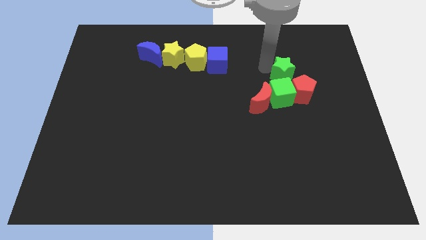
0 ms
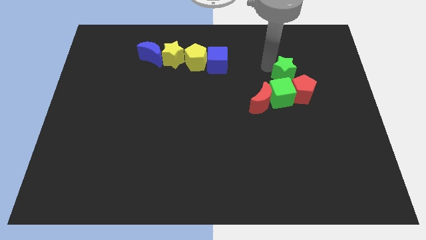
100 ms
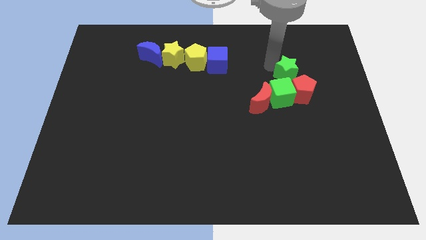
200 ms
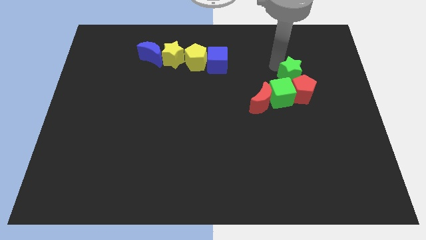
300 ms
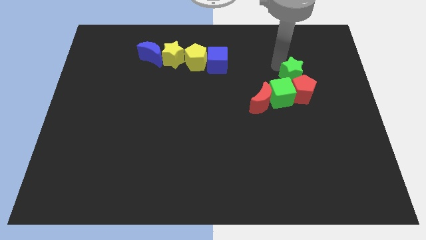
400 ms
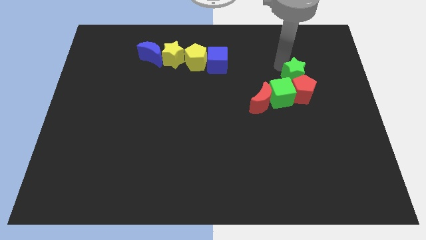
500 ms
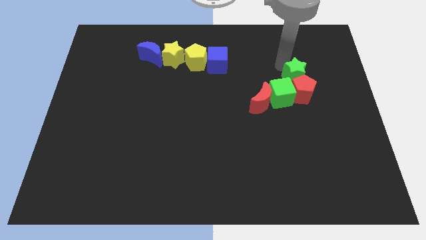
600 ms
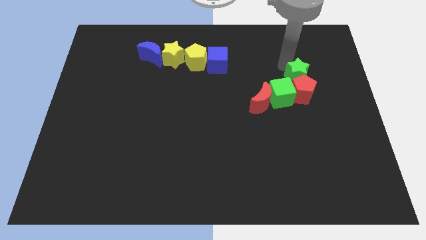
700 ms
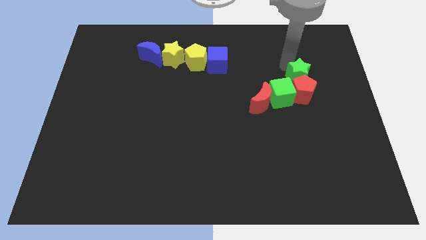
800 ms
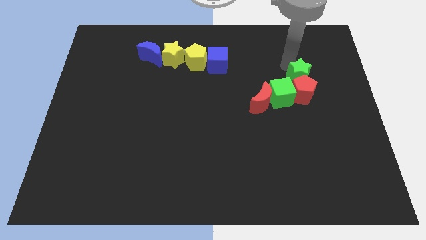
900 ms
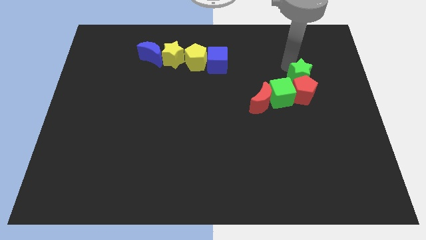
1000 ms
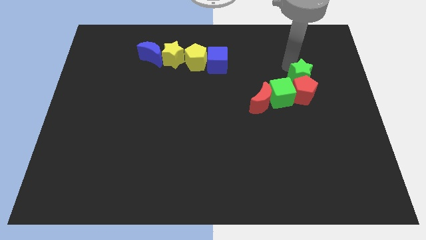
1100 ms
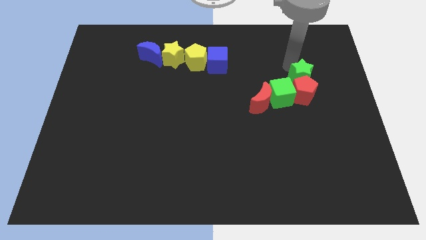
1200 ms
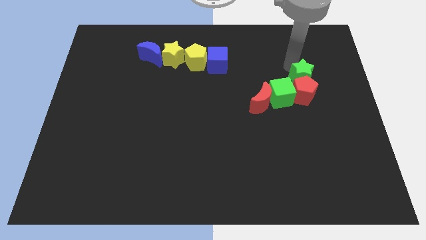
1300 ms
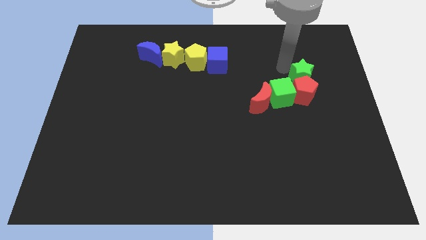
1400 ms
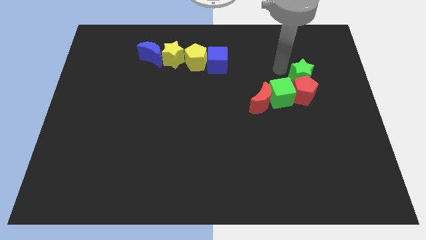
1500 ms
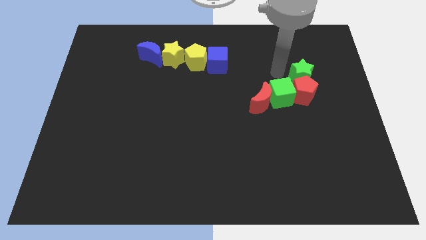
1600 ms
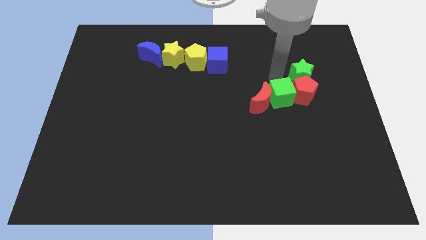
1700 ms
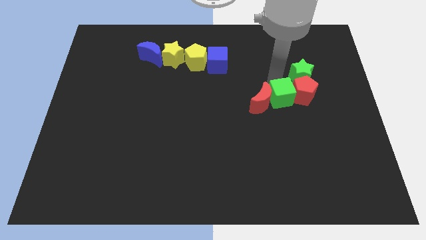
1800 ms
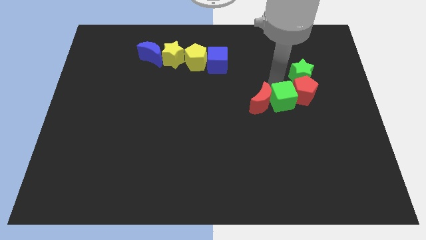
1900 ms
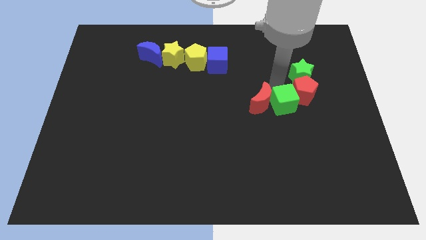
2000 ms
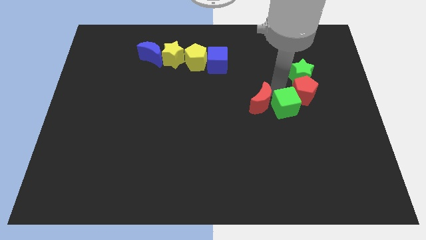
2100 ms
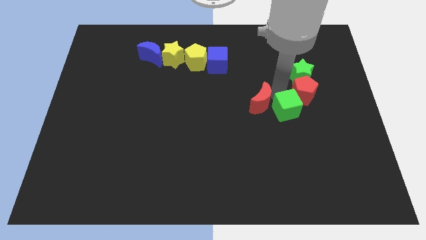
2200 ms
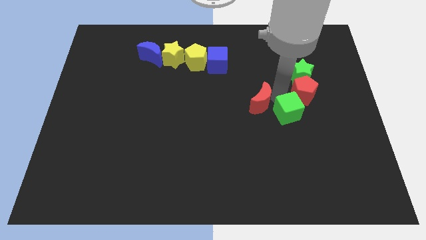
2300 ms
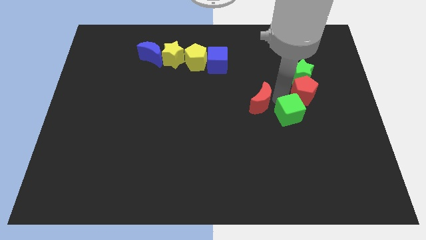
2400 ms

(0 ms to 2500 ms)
separate the green cube from red crescent and red pentagon

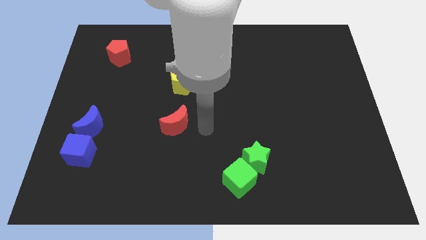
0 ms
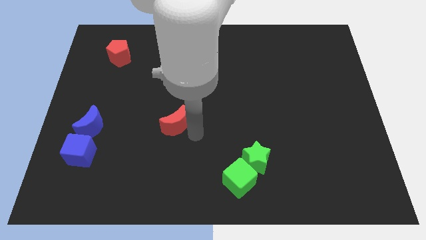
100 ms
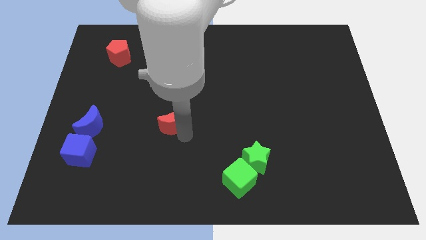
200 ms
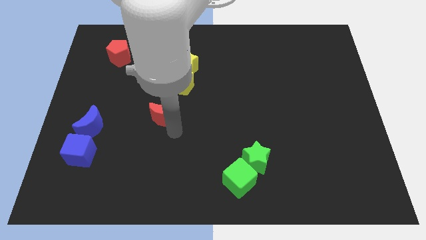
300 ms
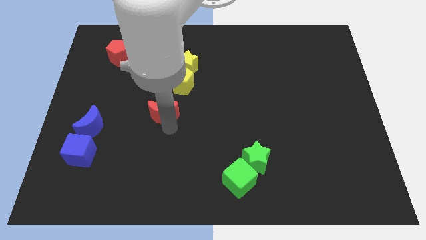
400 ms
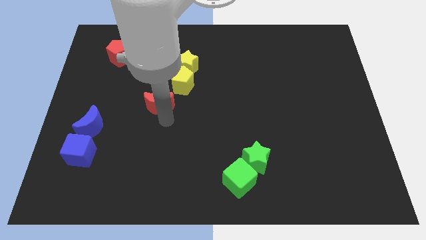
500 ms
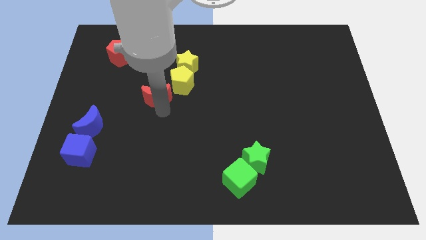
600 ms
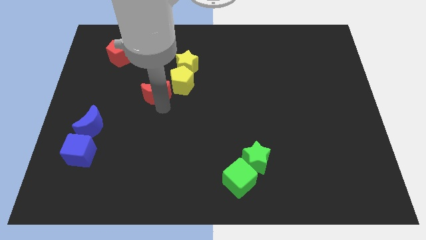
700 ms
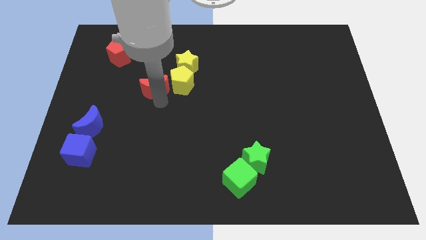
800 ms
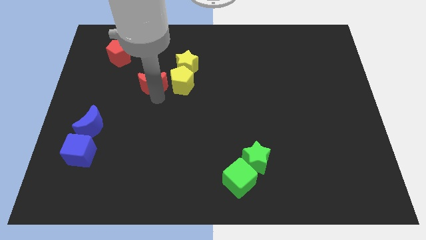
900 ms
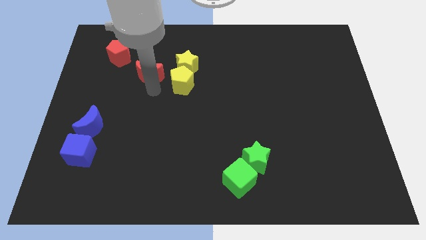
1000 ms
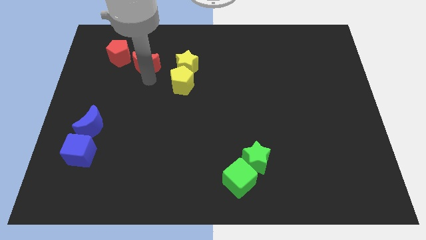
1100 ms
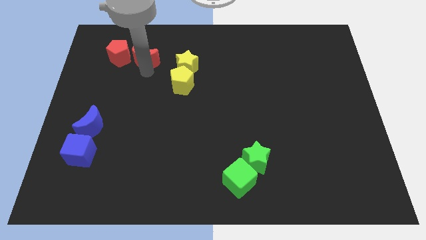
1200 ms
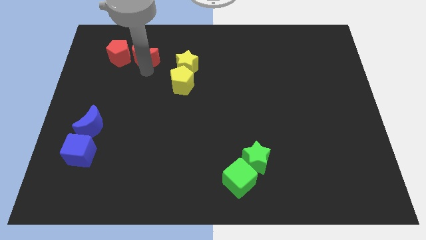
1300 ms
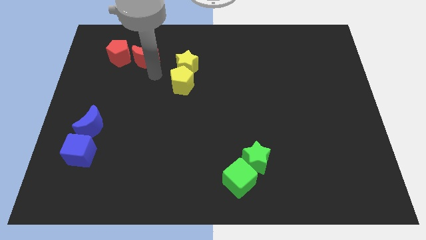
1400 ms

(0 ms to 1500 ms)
place red moon parallel right to the red pentagon

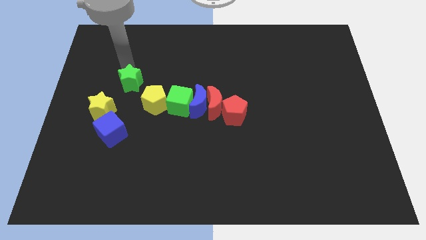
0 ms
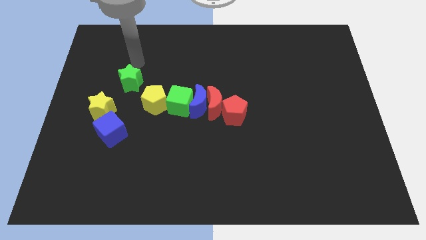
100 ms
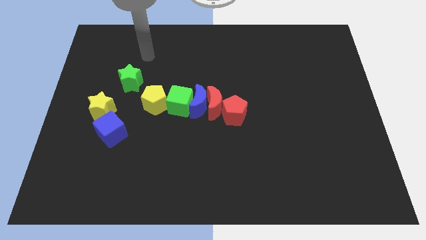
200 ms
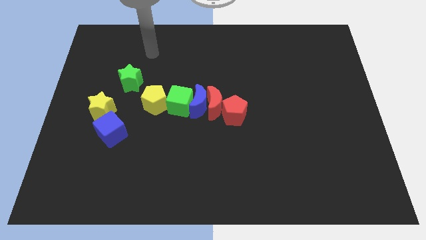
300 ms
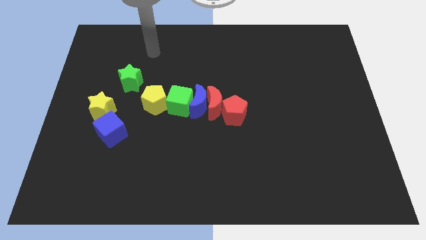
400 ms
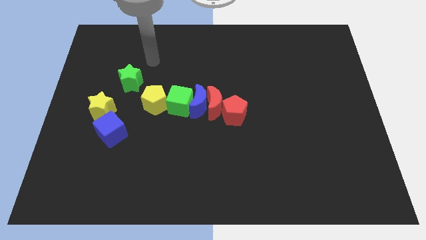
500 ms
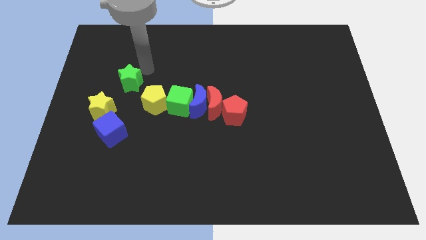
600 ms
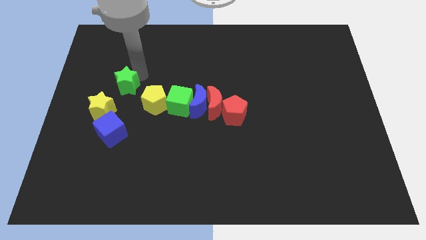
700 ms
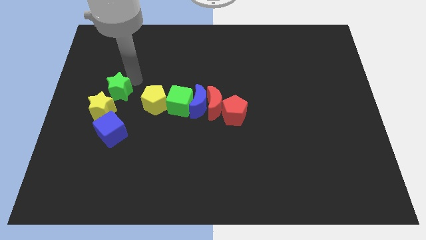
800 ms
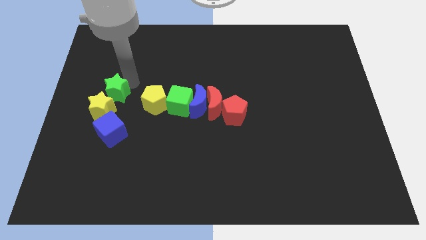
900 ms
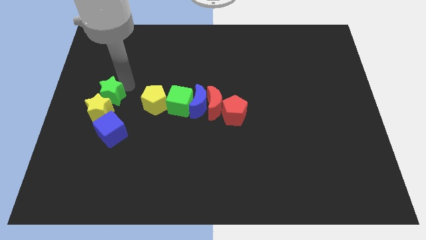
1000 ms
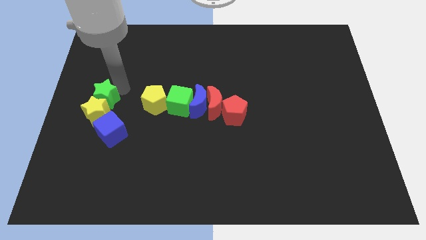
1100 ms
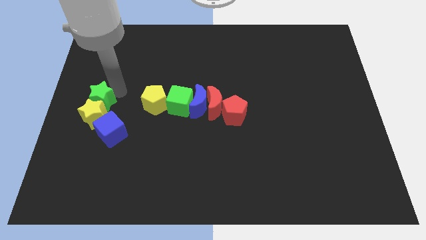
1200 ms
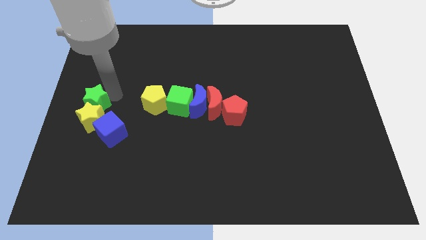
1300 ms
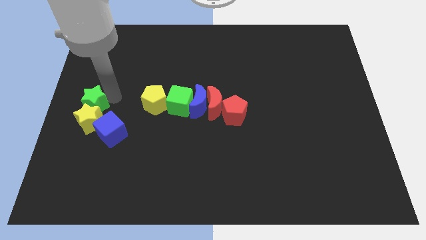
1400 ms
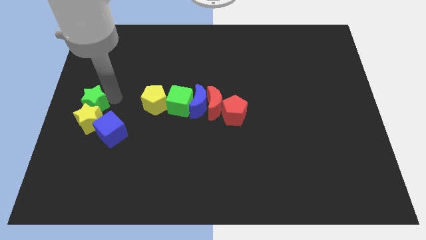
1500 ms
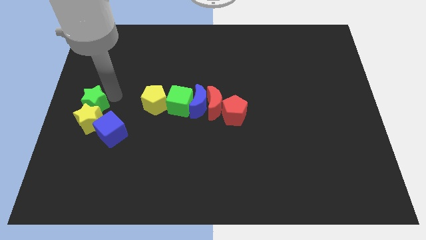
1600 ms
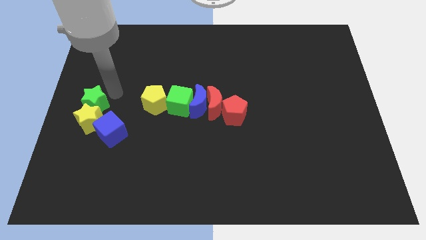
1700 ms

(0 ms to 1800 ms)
push the green star into the yellow star

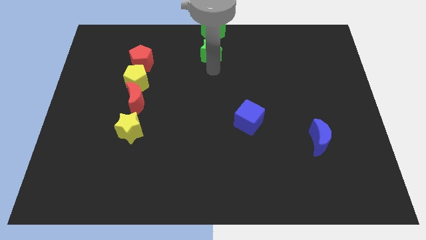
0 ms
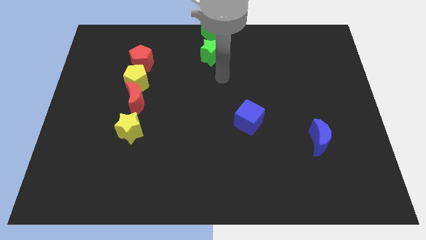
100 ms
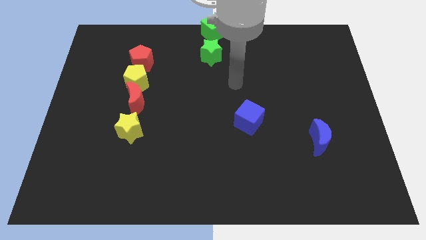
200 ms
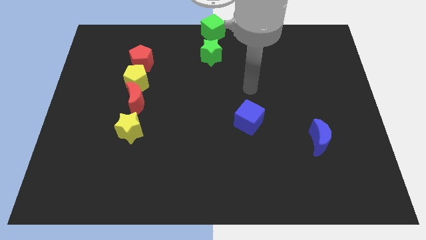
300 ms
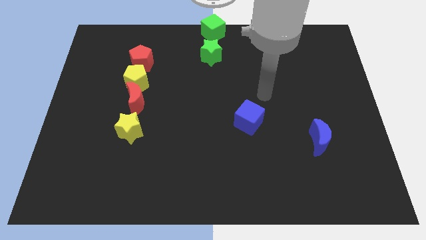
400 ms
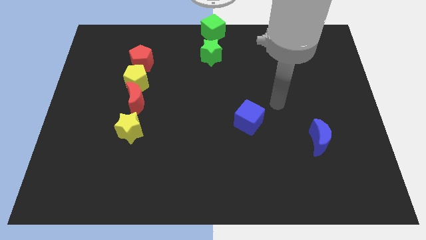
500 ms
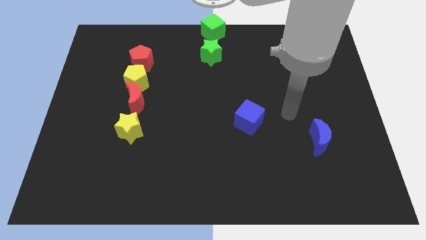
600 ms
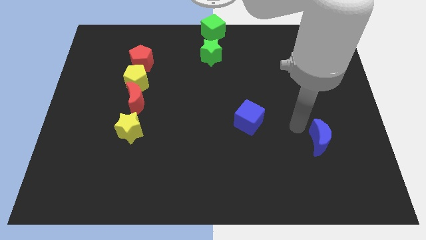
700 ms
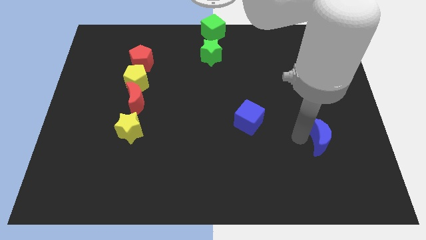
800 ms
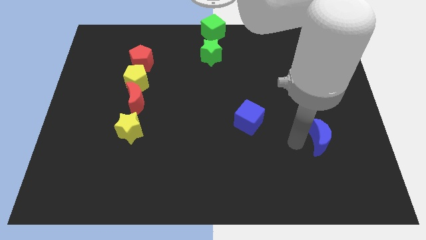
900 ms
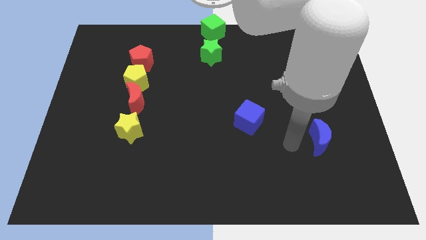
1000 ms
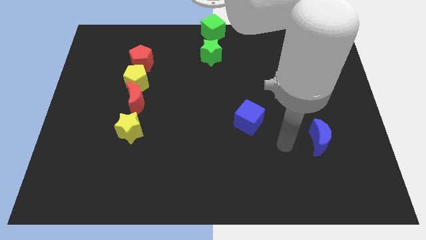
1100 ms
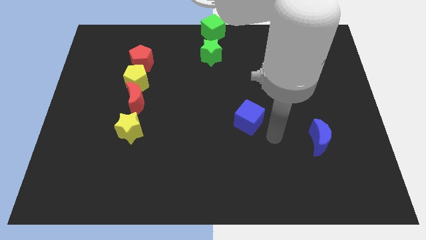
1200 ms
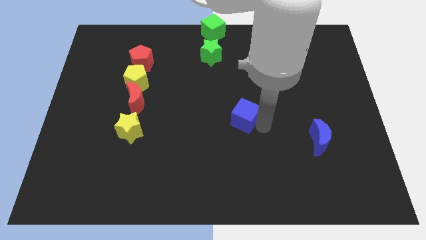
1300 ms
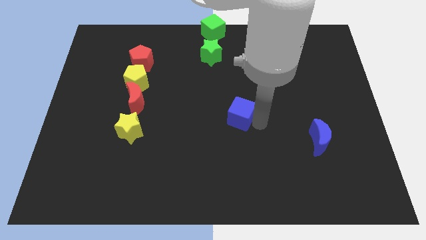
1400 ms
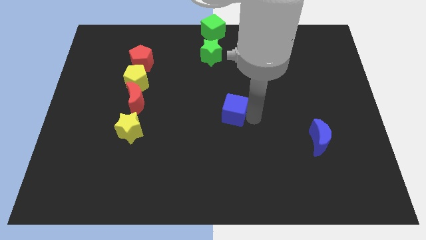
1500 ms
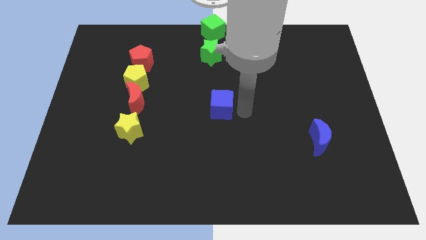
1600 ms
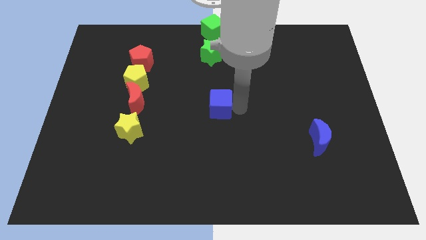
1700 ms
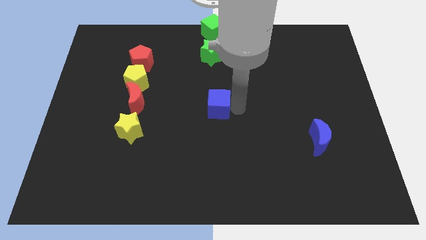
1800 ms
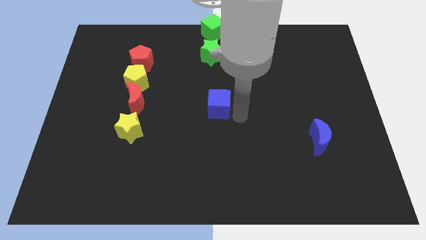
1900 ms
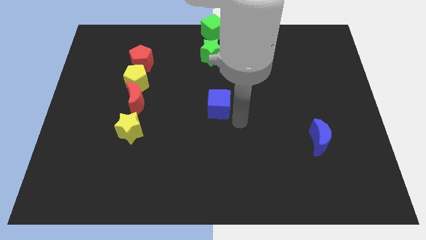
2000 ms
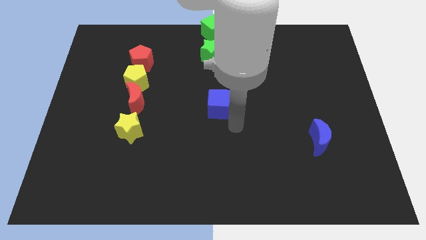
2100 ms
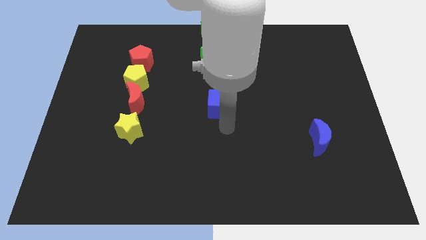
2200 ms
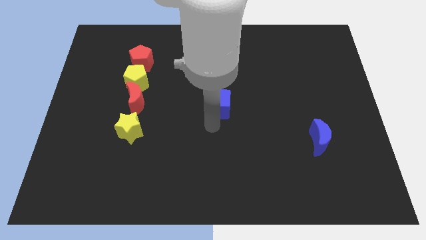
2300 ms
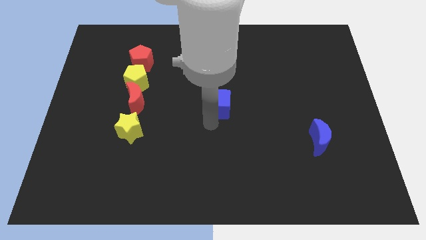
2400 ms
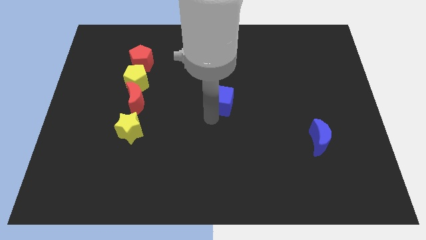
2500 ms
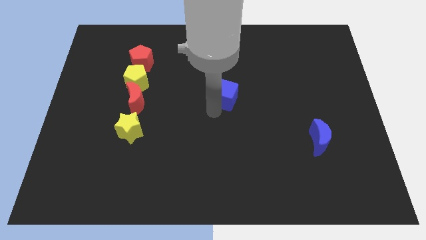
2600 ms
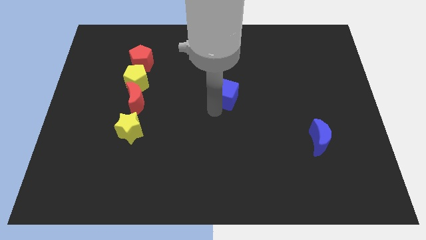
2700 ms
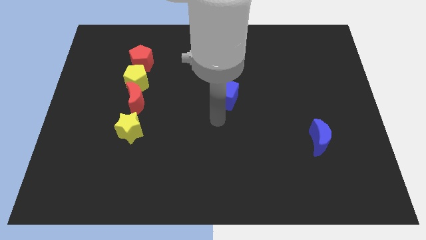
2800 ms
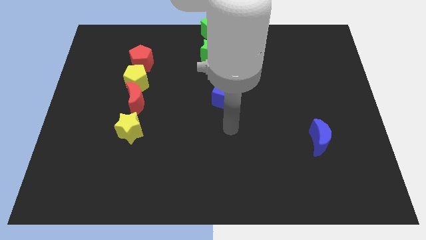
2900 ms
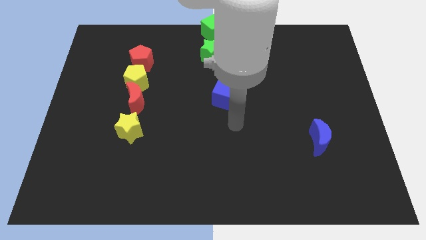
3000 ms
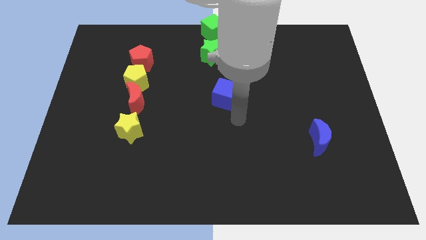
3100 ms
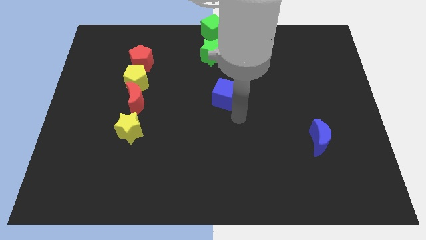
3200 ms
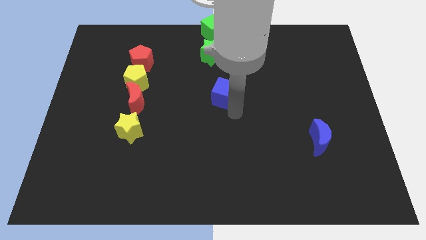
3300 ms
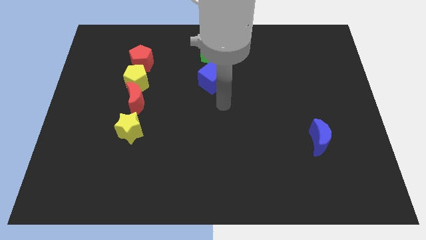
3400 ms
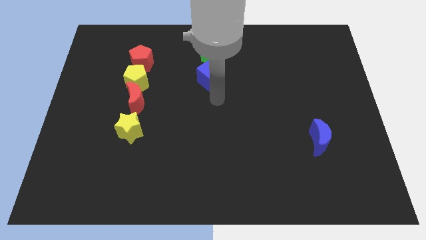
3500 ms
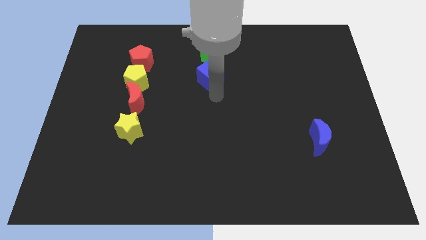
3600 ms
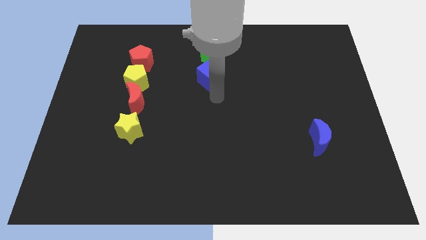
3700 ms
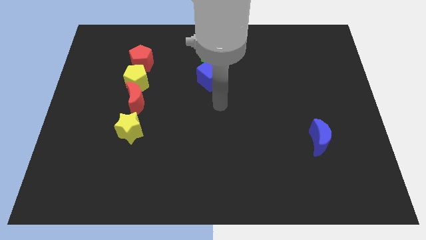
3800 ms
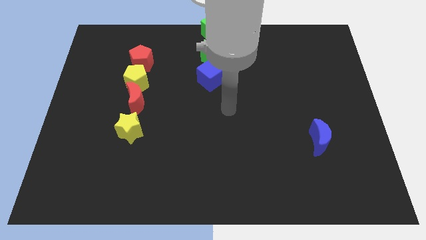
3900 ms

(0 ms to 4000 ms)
put the blue cube below the green star
